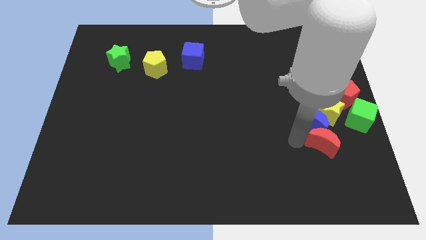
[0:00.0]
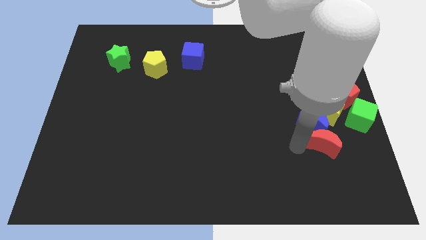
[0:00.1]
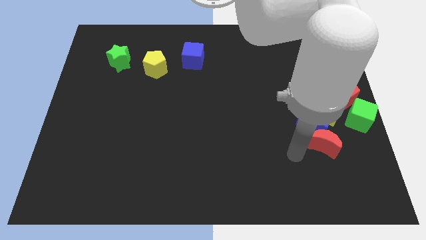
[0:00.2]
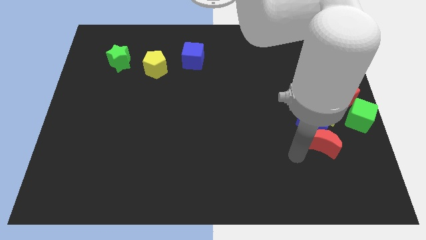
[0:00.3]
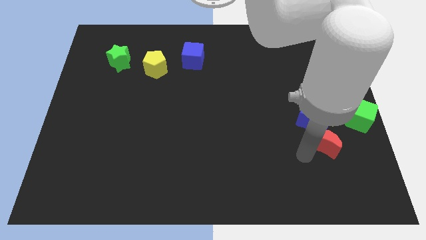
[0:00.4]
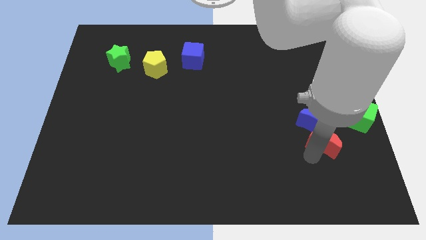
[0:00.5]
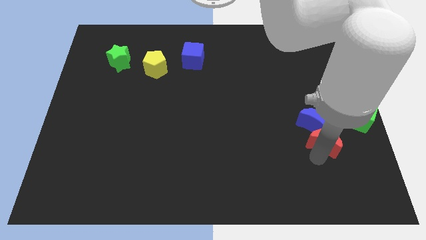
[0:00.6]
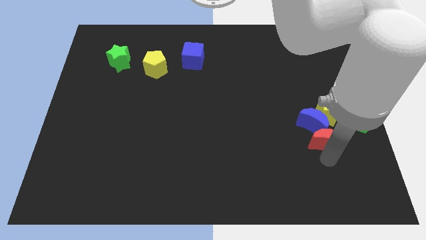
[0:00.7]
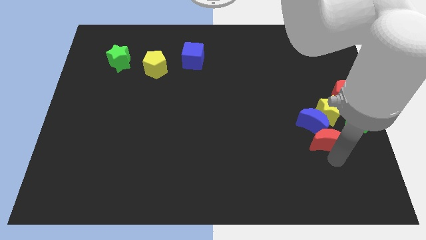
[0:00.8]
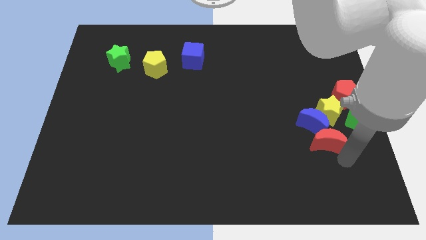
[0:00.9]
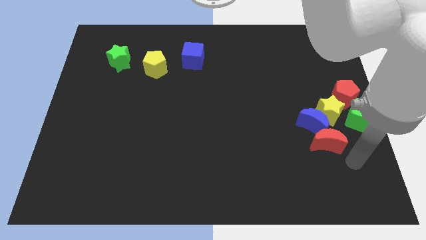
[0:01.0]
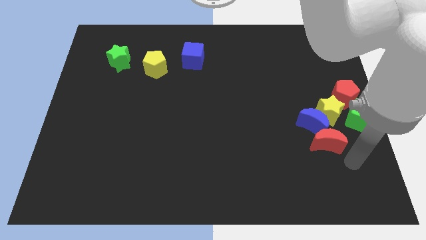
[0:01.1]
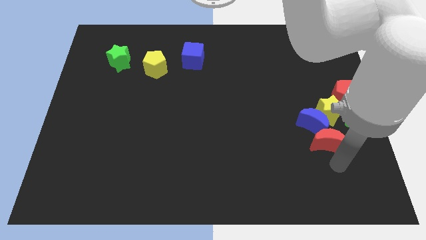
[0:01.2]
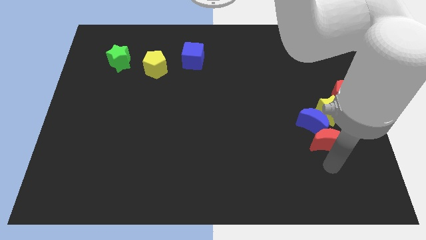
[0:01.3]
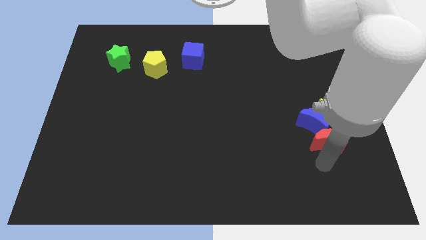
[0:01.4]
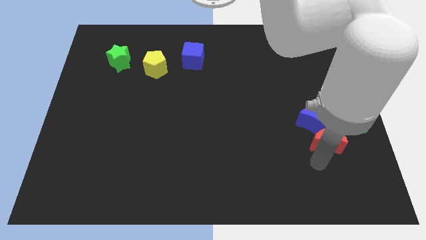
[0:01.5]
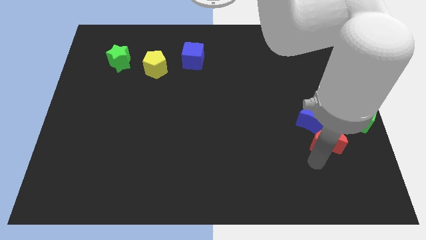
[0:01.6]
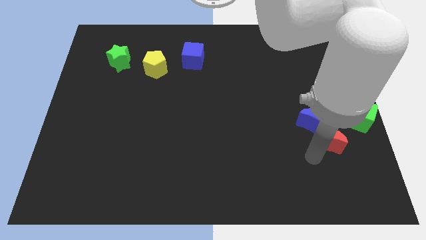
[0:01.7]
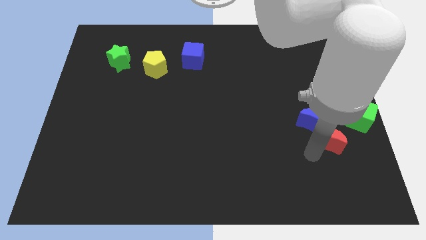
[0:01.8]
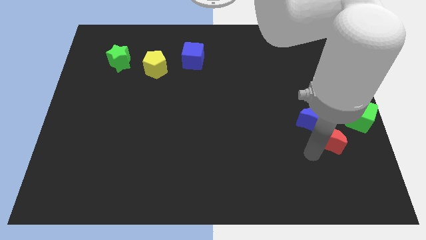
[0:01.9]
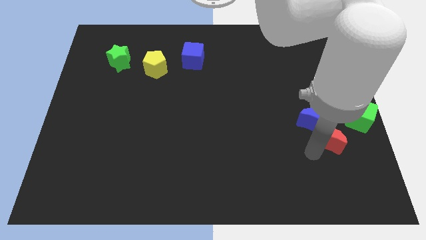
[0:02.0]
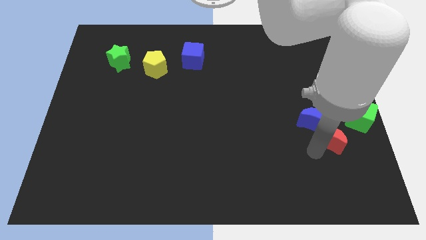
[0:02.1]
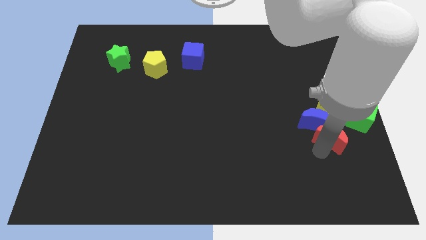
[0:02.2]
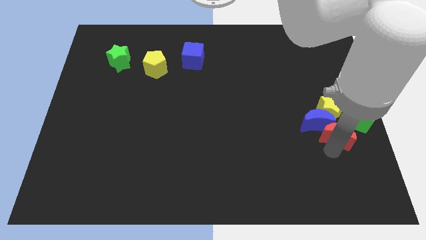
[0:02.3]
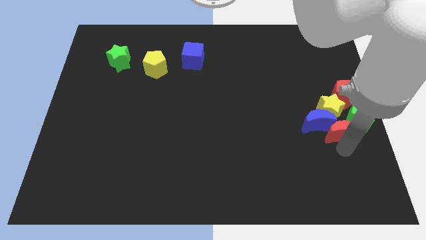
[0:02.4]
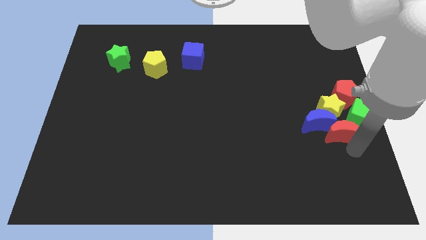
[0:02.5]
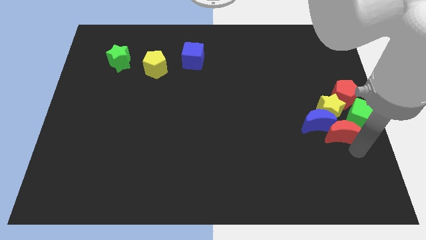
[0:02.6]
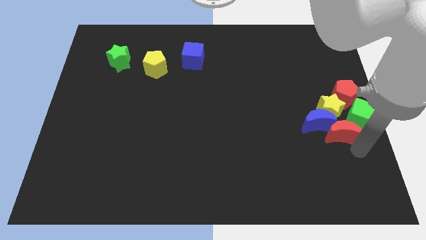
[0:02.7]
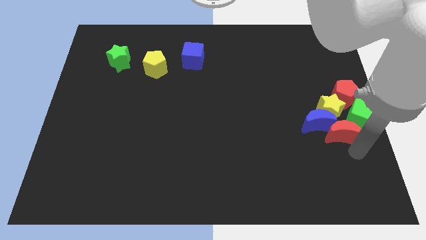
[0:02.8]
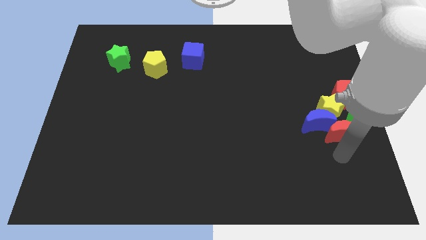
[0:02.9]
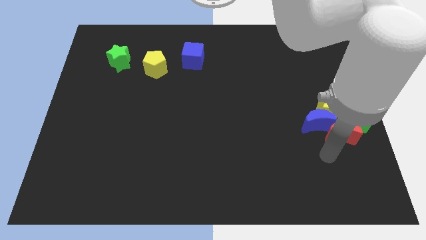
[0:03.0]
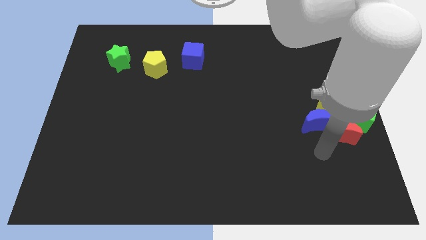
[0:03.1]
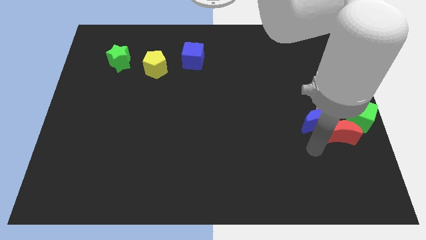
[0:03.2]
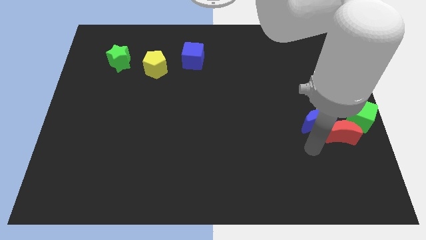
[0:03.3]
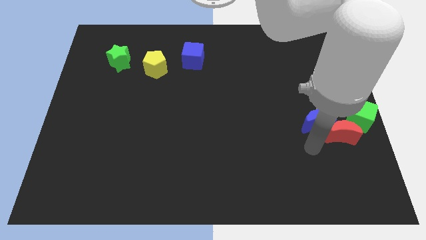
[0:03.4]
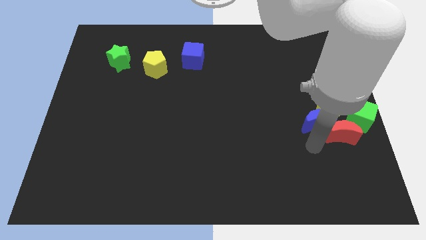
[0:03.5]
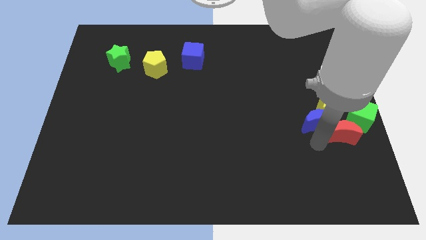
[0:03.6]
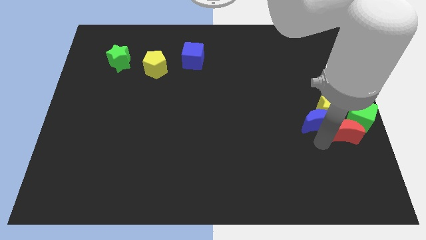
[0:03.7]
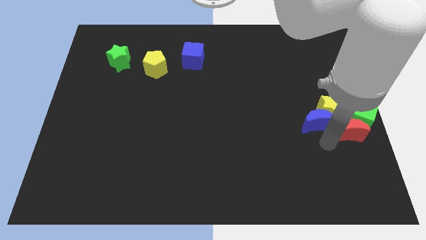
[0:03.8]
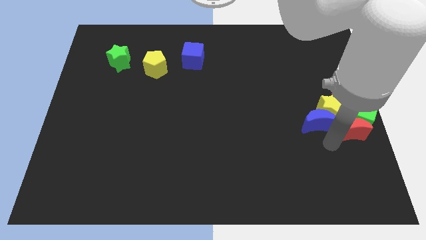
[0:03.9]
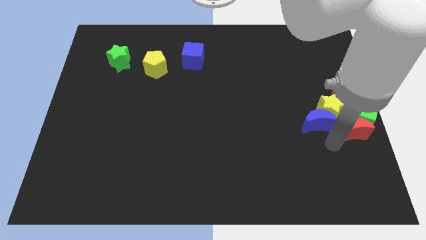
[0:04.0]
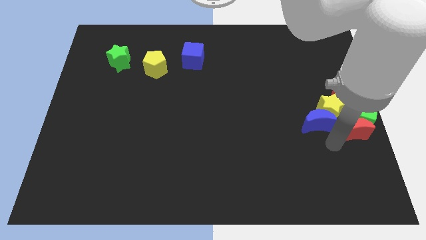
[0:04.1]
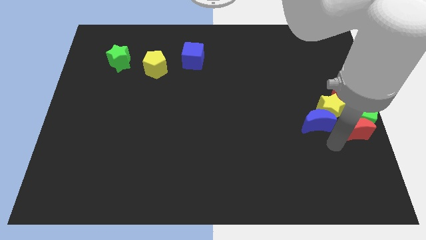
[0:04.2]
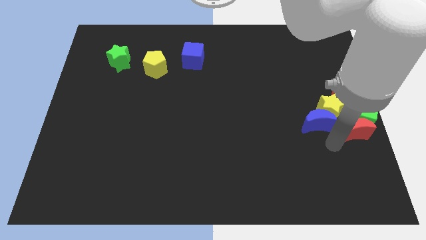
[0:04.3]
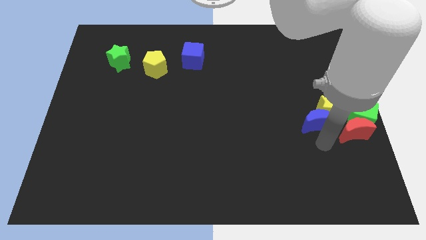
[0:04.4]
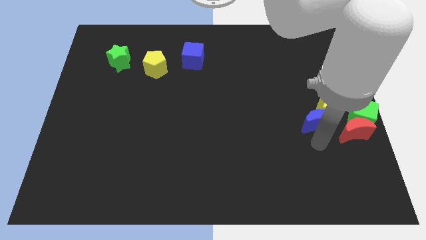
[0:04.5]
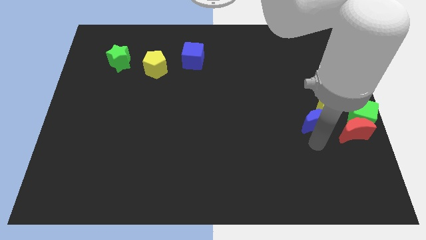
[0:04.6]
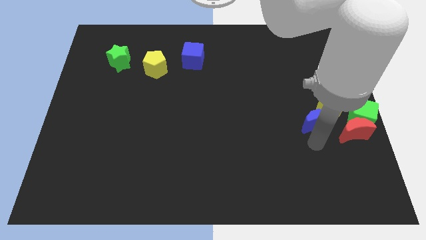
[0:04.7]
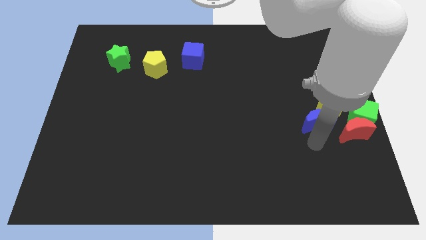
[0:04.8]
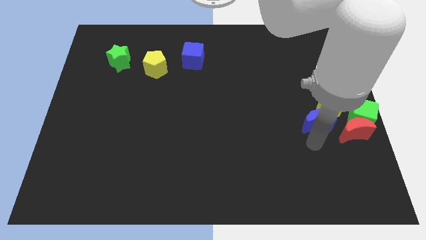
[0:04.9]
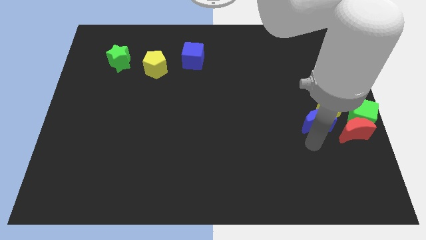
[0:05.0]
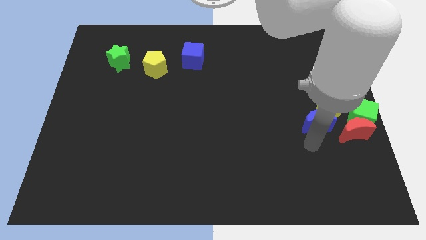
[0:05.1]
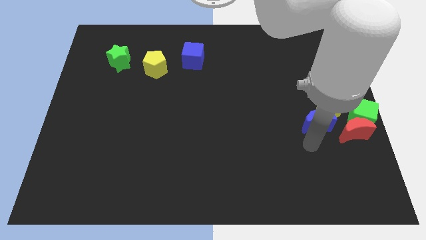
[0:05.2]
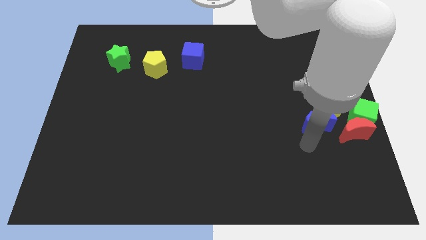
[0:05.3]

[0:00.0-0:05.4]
push the red crescent into the green cube

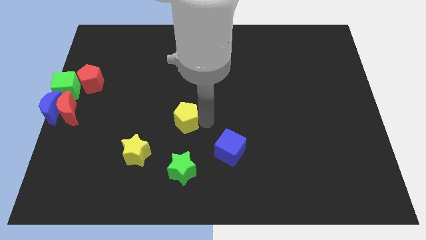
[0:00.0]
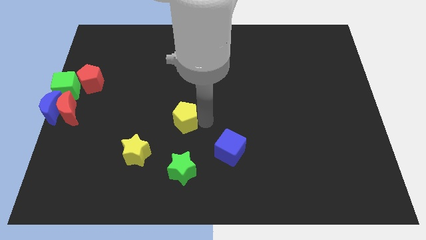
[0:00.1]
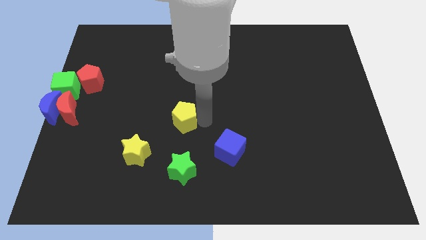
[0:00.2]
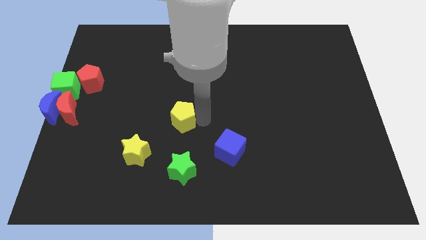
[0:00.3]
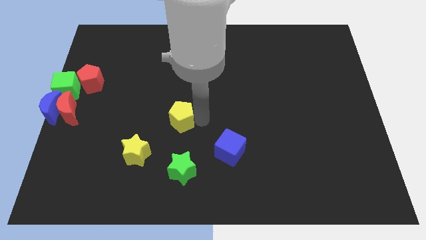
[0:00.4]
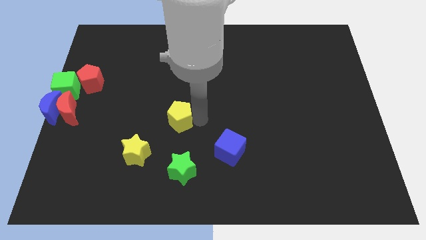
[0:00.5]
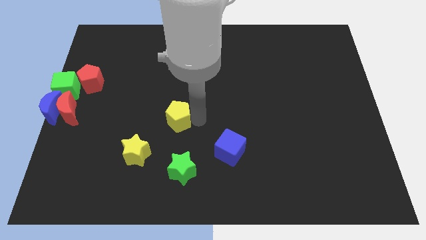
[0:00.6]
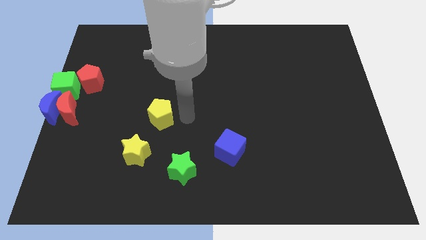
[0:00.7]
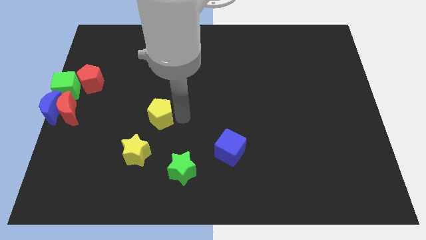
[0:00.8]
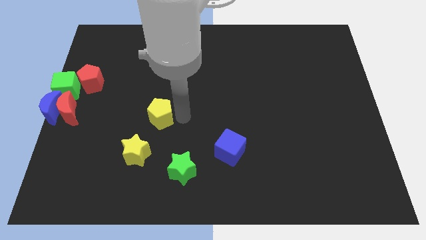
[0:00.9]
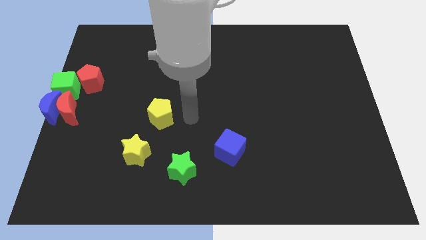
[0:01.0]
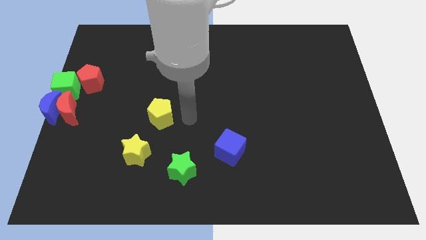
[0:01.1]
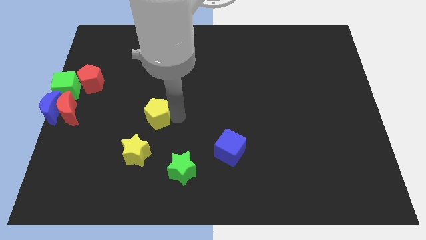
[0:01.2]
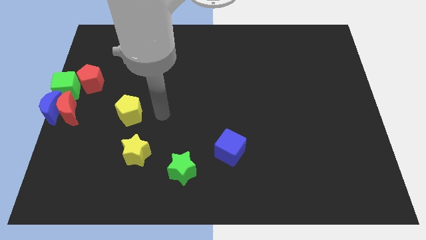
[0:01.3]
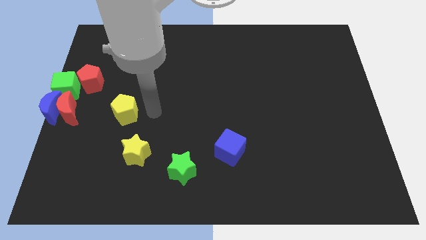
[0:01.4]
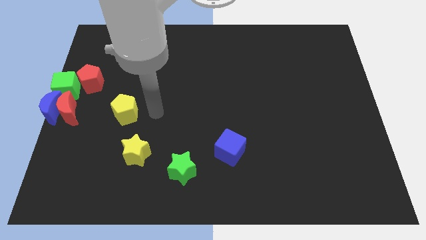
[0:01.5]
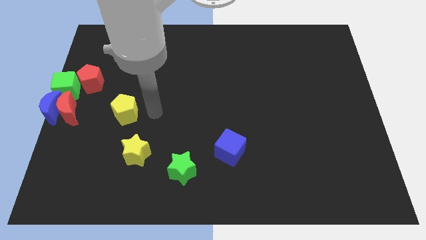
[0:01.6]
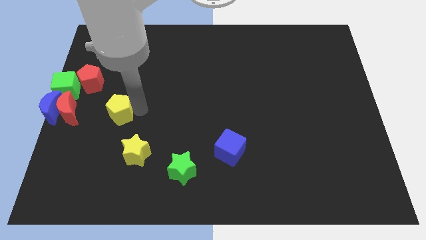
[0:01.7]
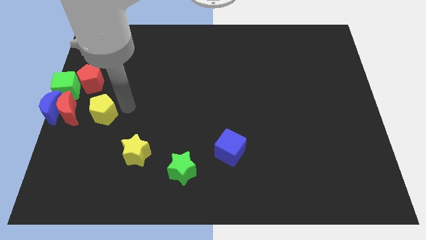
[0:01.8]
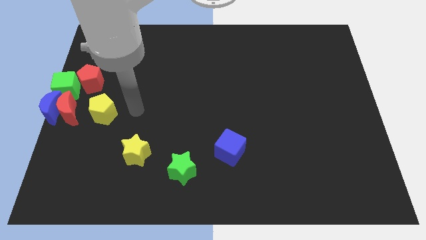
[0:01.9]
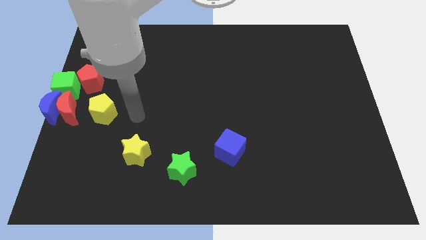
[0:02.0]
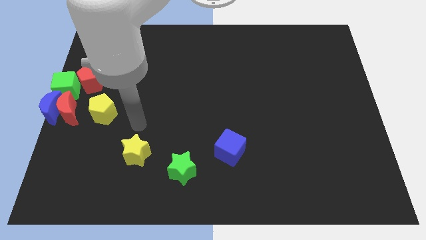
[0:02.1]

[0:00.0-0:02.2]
place the yellow pentagon parallel to red moon

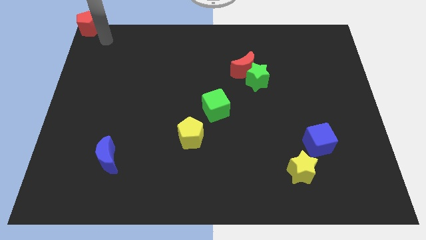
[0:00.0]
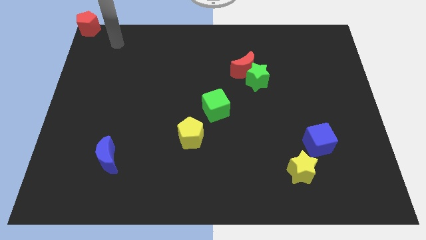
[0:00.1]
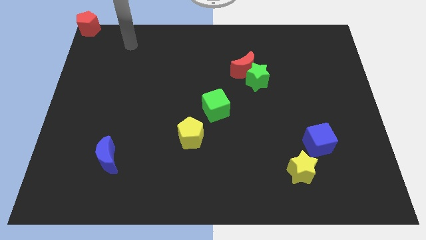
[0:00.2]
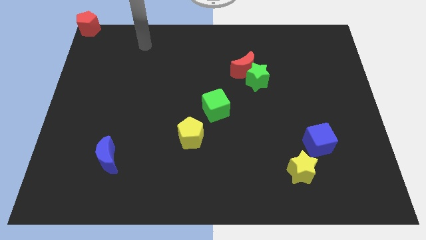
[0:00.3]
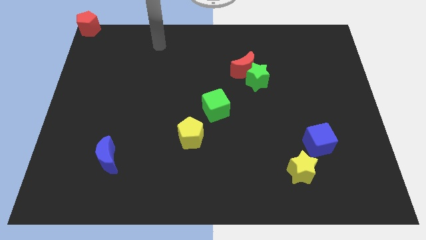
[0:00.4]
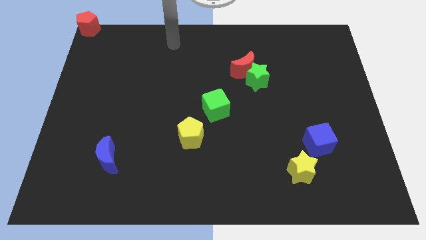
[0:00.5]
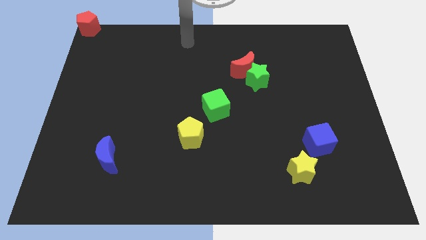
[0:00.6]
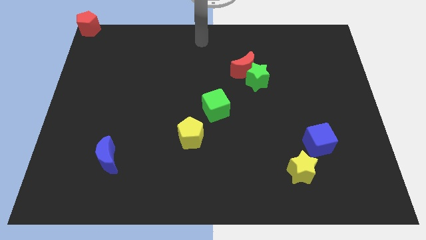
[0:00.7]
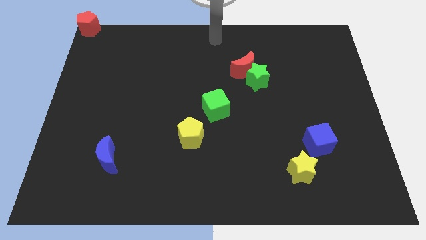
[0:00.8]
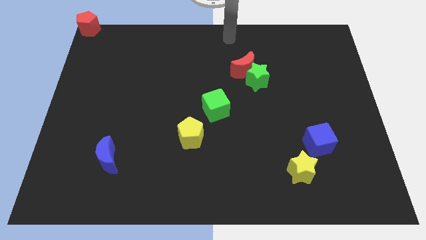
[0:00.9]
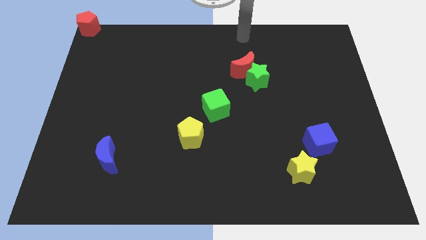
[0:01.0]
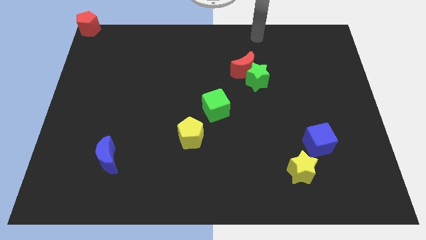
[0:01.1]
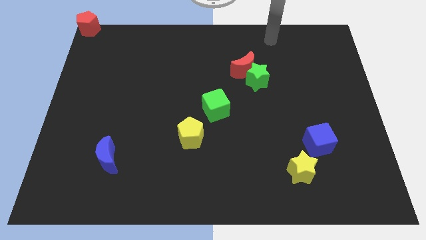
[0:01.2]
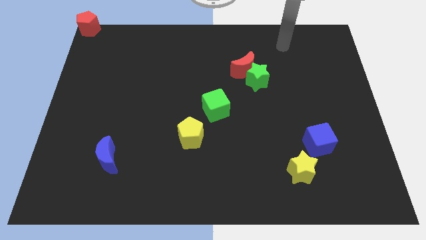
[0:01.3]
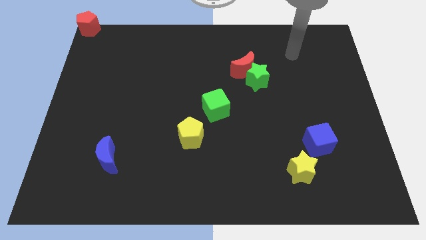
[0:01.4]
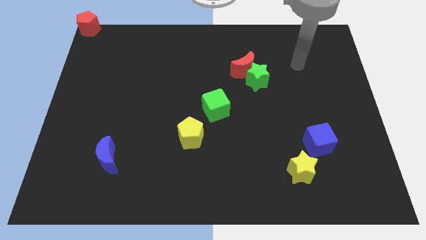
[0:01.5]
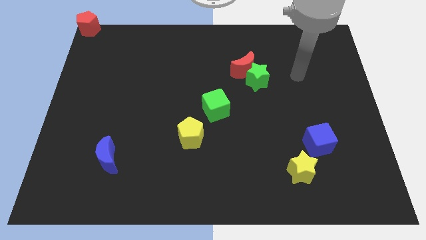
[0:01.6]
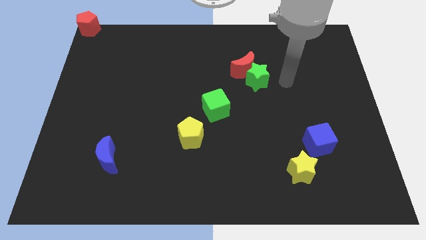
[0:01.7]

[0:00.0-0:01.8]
place your arm away from the red pentagon
